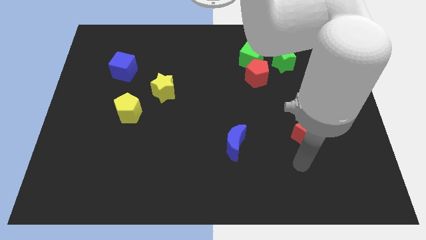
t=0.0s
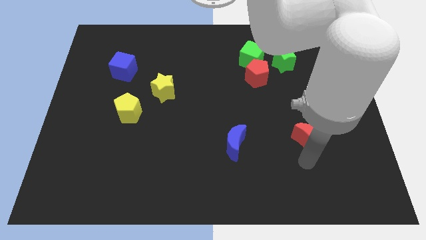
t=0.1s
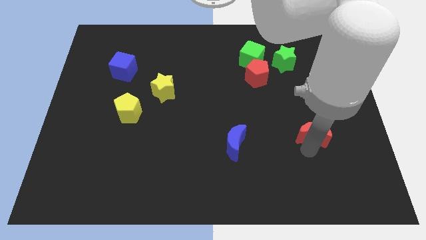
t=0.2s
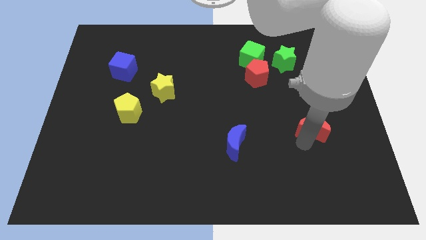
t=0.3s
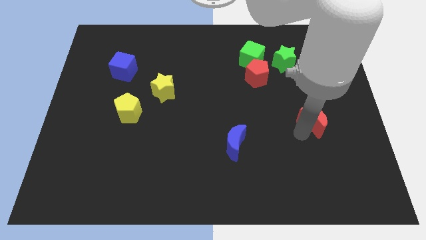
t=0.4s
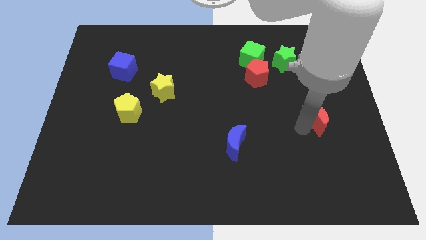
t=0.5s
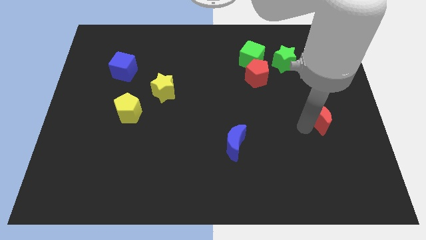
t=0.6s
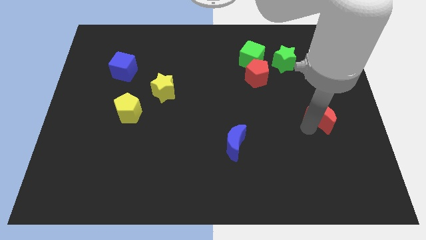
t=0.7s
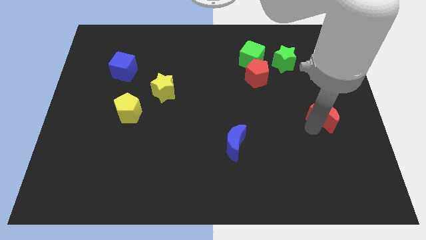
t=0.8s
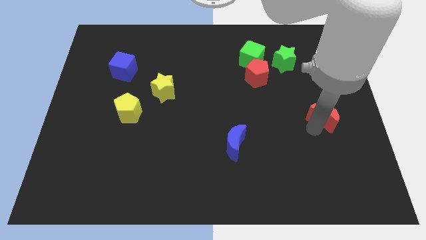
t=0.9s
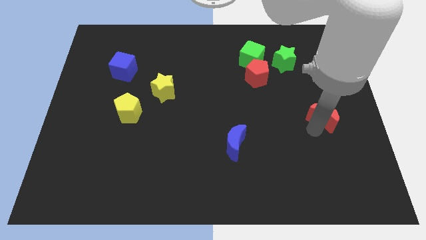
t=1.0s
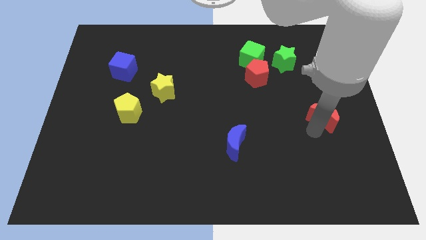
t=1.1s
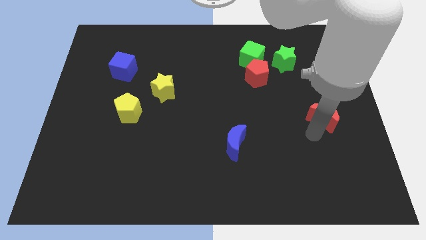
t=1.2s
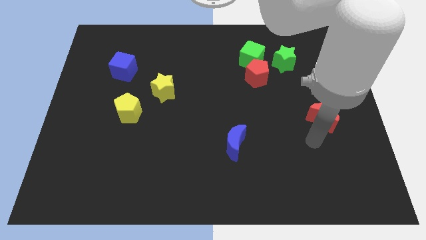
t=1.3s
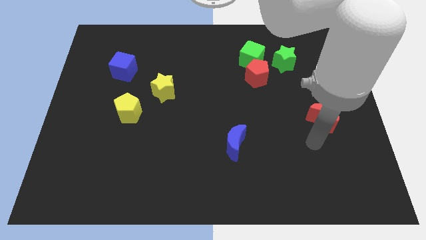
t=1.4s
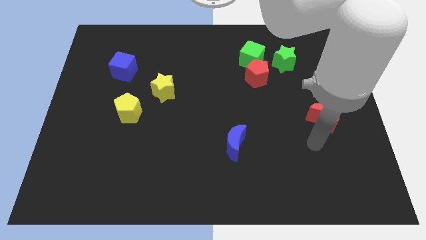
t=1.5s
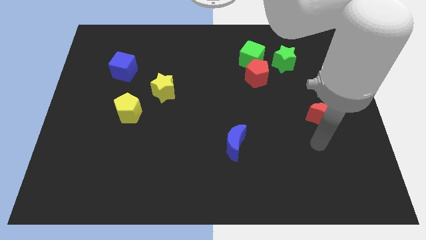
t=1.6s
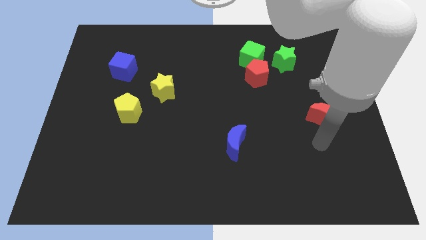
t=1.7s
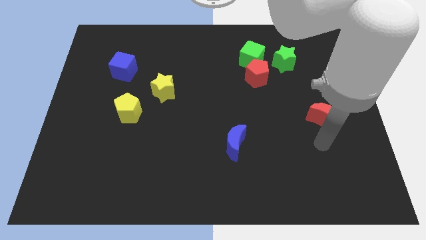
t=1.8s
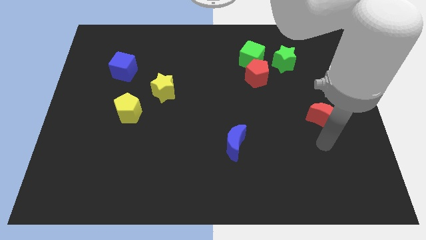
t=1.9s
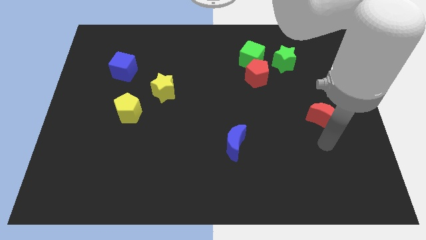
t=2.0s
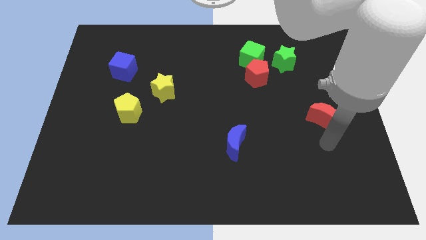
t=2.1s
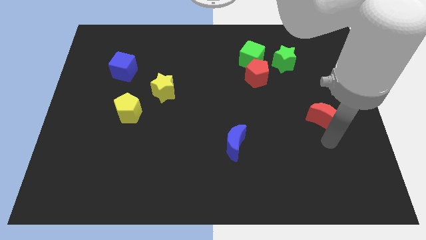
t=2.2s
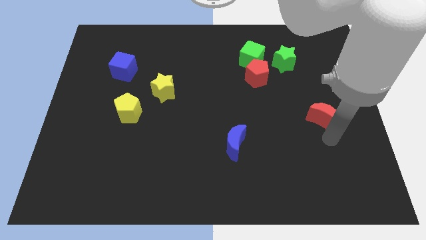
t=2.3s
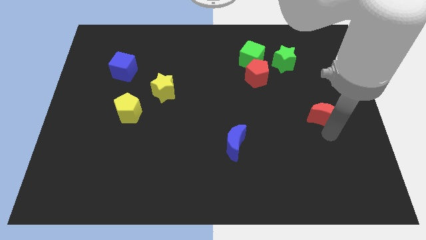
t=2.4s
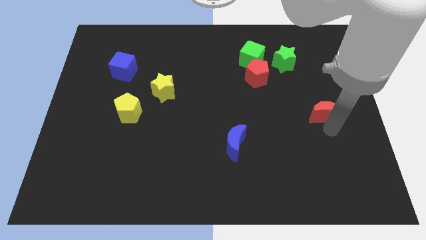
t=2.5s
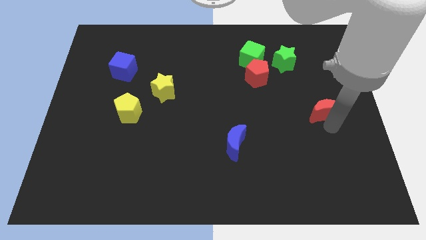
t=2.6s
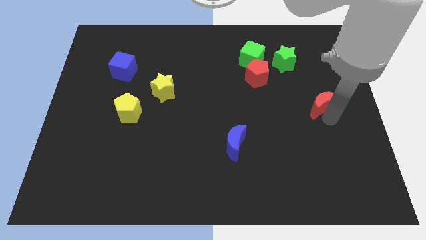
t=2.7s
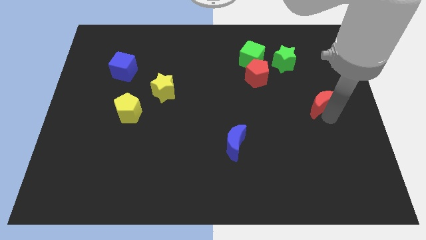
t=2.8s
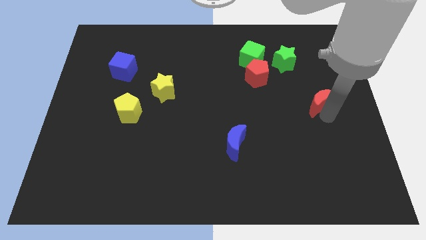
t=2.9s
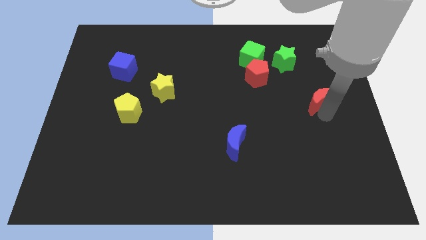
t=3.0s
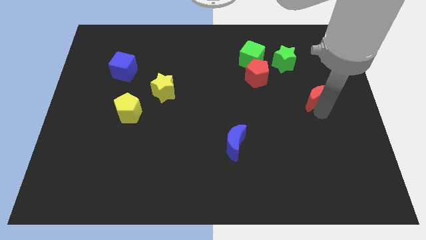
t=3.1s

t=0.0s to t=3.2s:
move red moon bottom right middle of the board

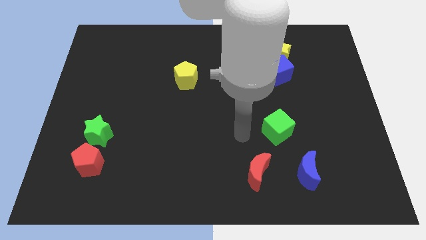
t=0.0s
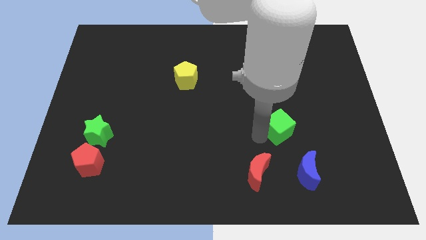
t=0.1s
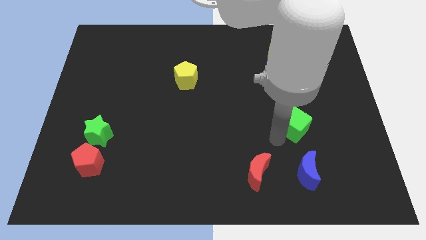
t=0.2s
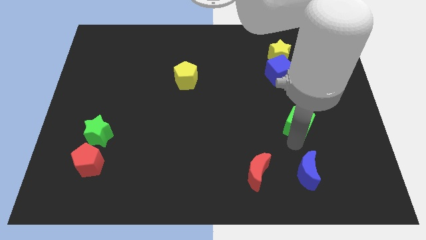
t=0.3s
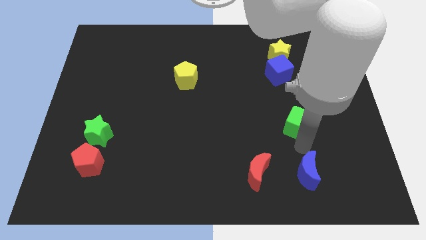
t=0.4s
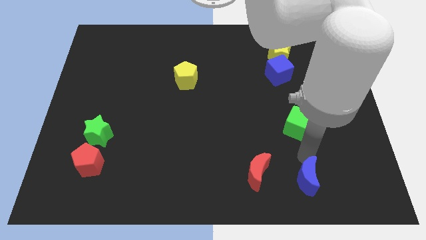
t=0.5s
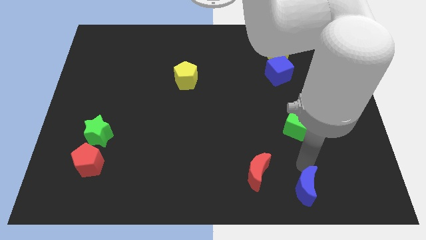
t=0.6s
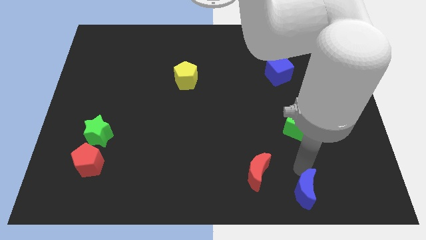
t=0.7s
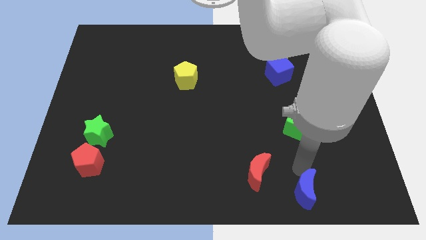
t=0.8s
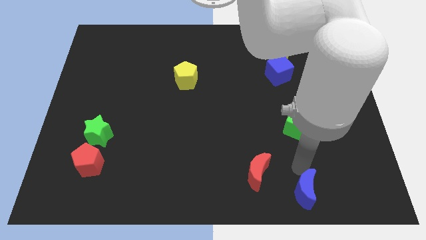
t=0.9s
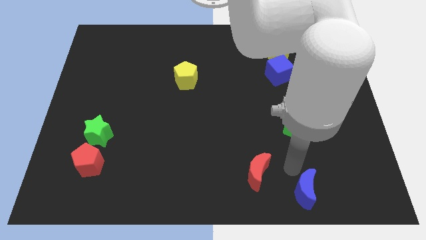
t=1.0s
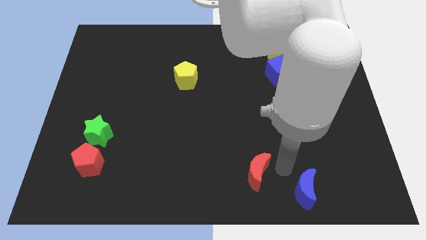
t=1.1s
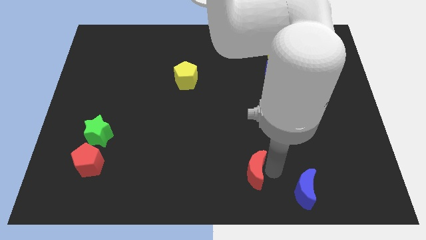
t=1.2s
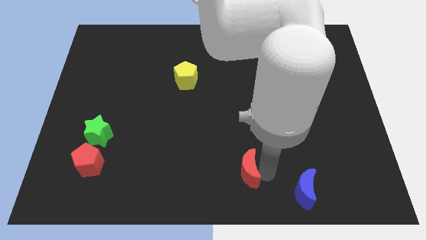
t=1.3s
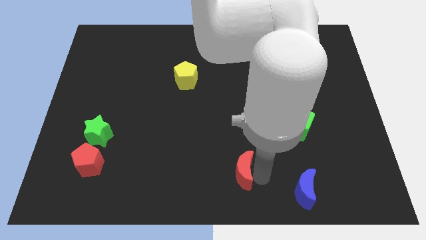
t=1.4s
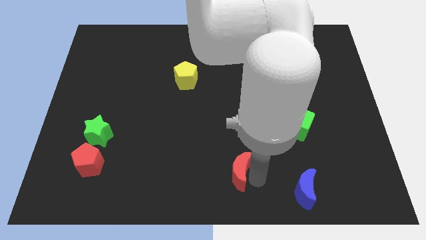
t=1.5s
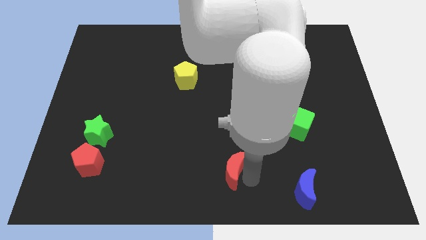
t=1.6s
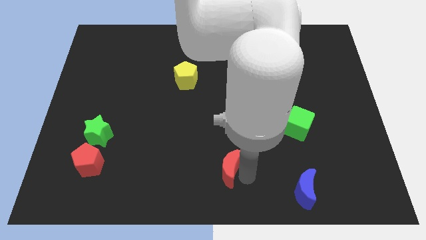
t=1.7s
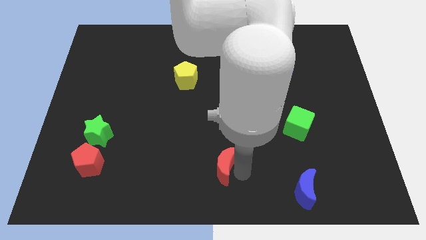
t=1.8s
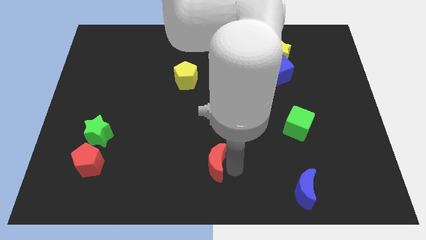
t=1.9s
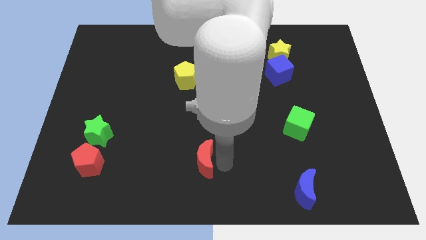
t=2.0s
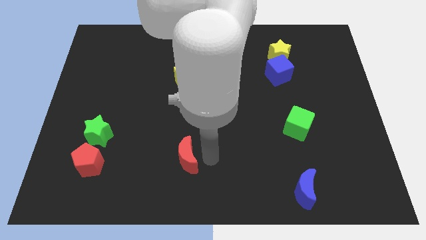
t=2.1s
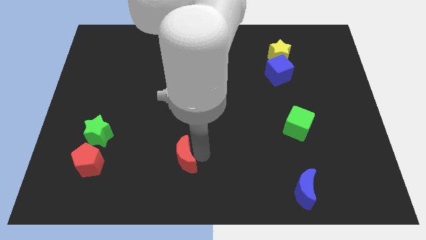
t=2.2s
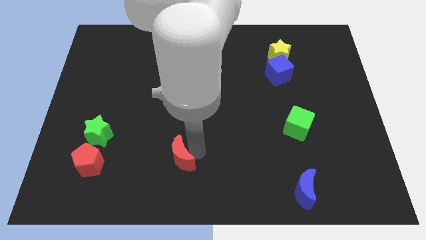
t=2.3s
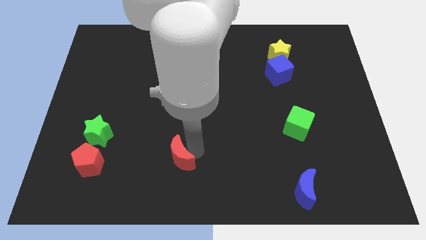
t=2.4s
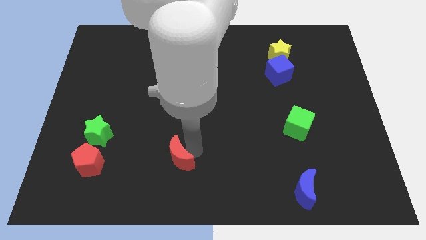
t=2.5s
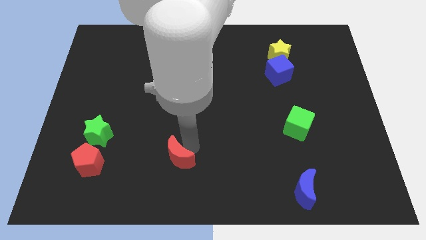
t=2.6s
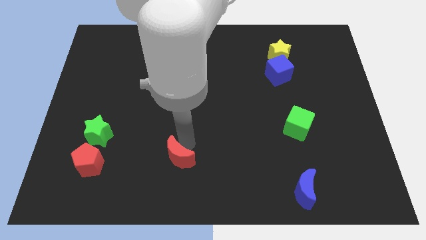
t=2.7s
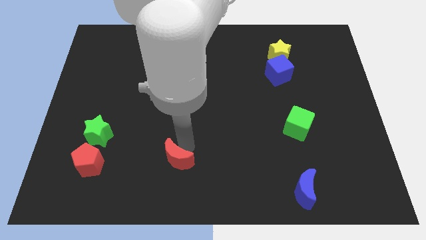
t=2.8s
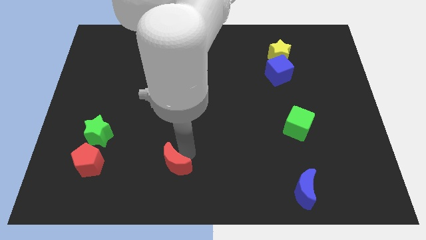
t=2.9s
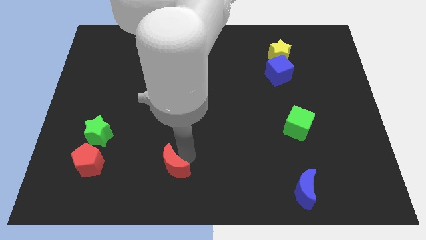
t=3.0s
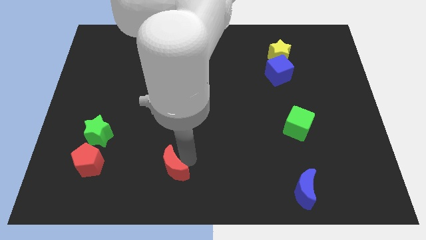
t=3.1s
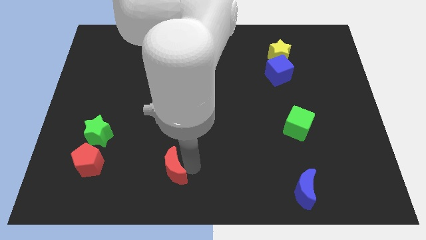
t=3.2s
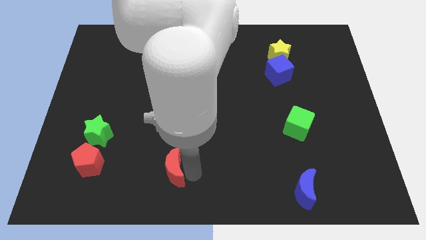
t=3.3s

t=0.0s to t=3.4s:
move the red moon to the bottom center

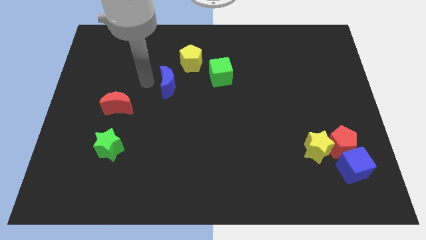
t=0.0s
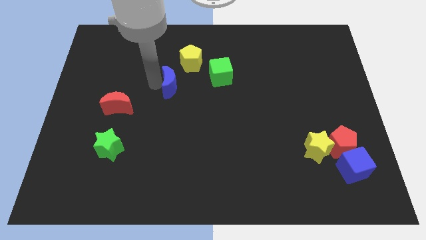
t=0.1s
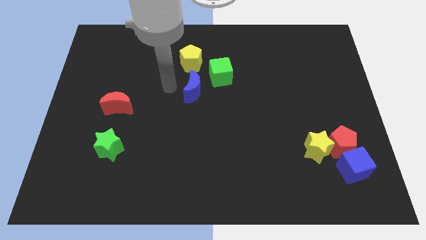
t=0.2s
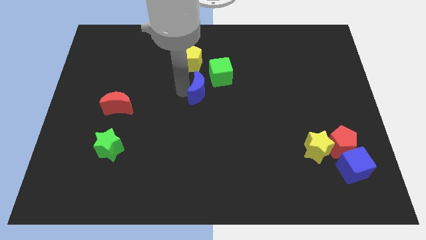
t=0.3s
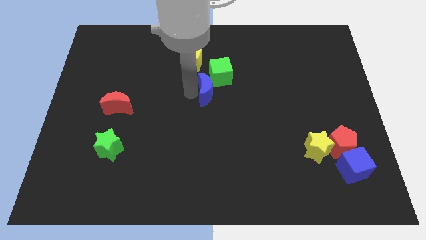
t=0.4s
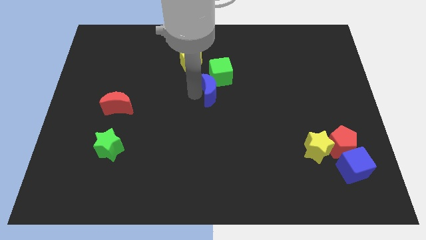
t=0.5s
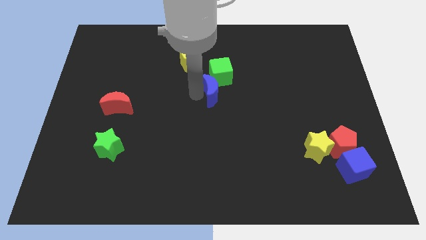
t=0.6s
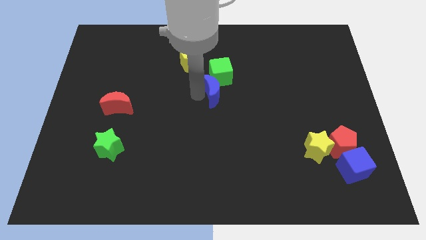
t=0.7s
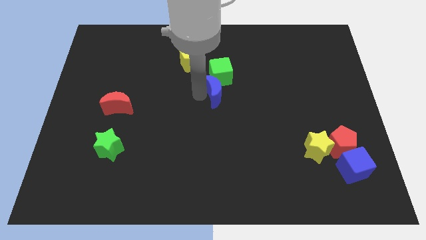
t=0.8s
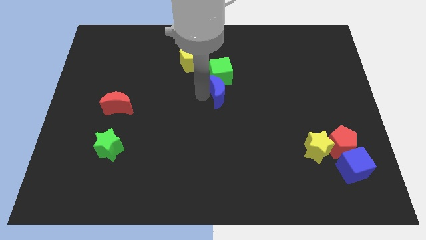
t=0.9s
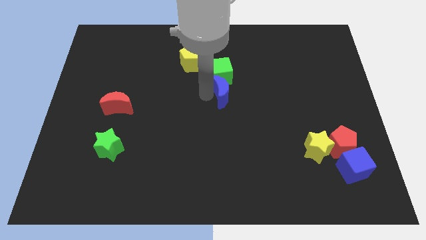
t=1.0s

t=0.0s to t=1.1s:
drag blue moon to the center

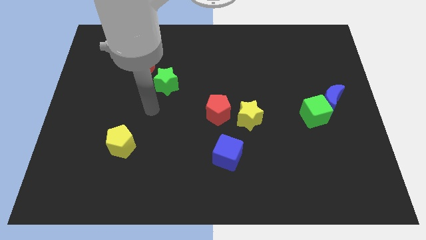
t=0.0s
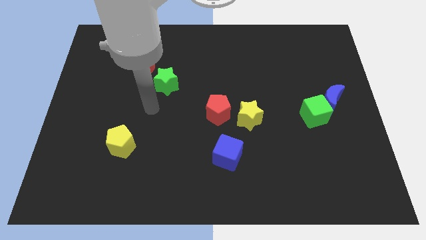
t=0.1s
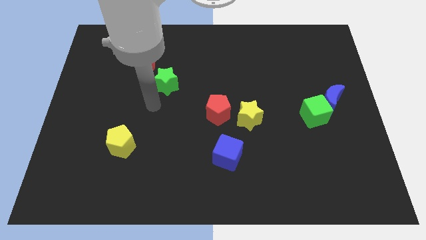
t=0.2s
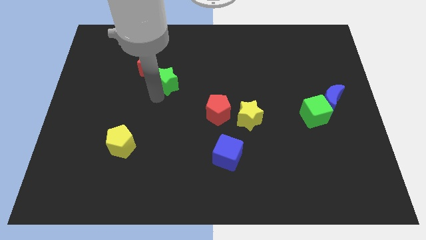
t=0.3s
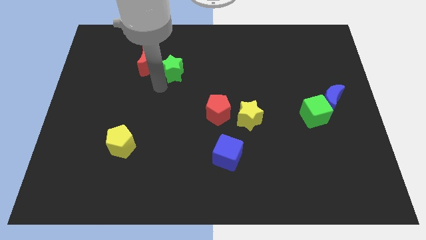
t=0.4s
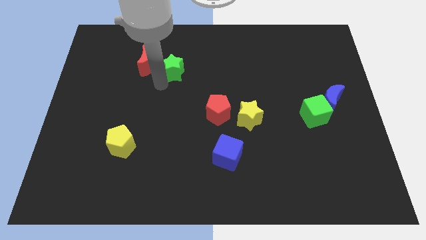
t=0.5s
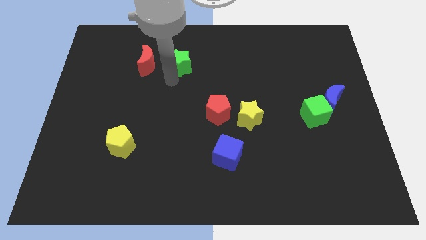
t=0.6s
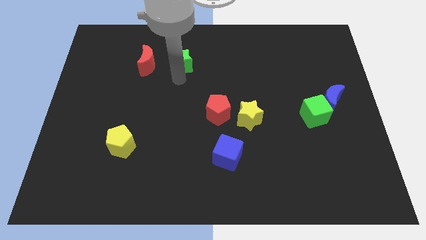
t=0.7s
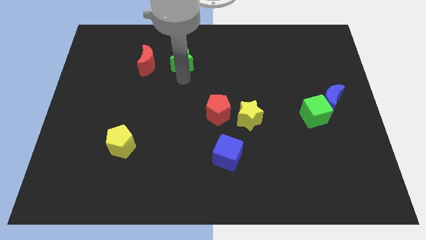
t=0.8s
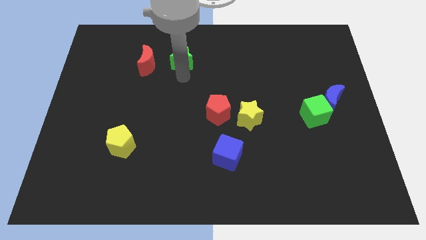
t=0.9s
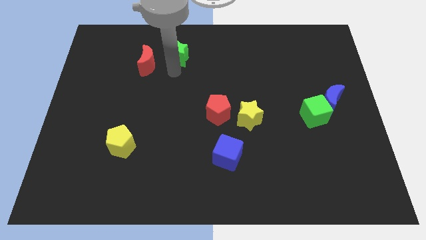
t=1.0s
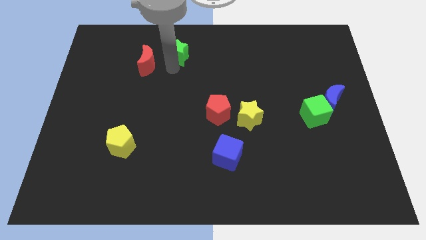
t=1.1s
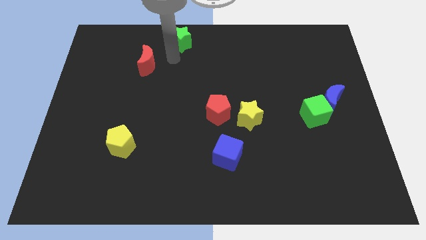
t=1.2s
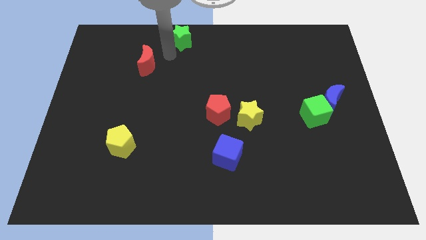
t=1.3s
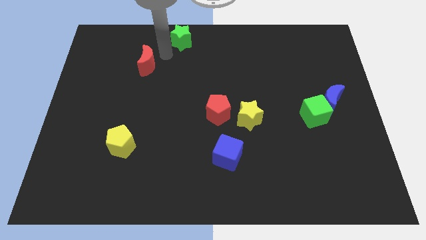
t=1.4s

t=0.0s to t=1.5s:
push the green star towards top
